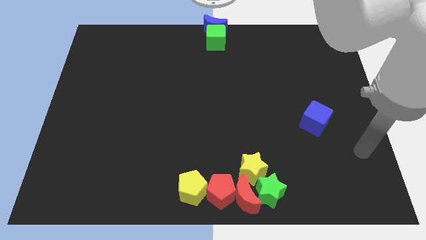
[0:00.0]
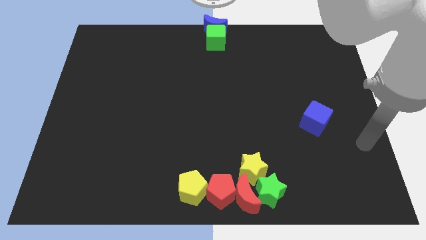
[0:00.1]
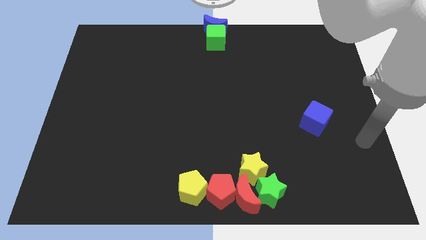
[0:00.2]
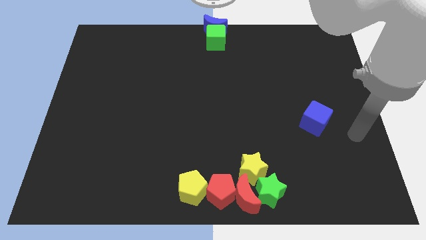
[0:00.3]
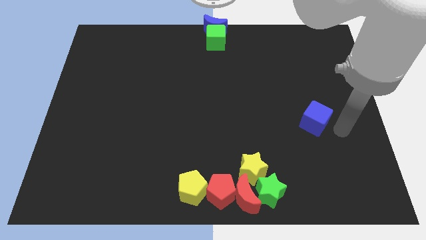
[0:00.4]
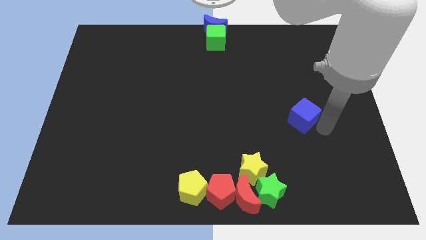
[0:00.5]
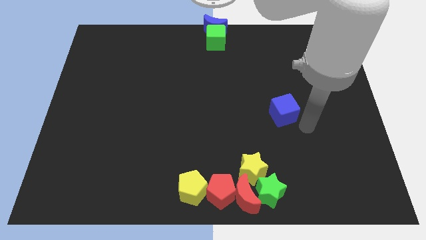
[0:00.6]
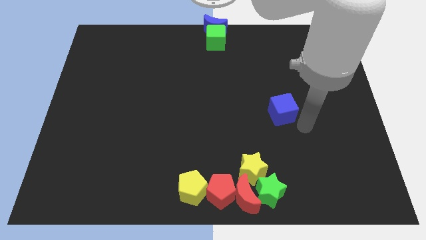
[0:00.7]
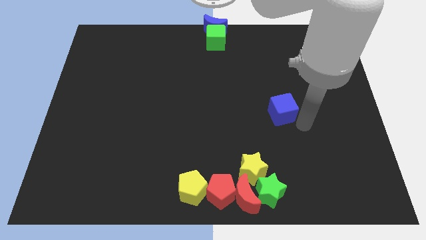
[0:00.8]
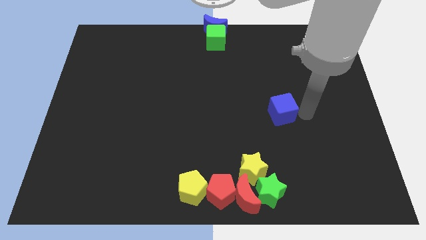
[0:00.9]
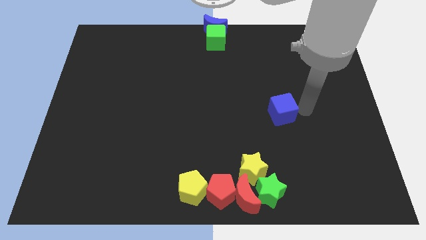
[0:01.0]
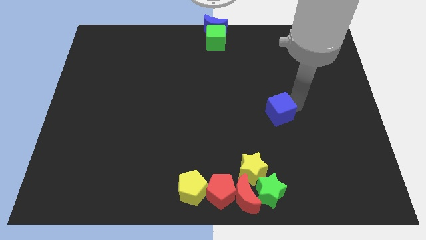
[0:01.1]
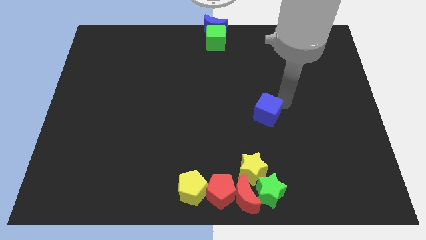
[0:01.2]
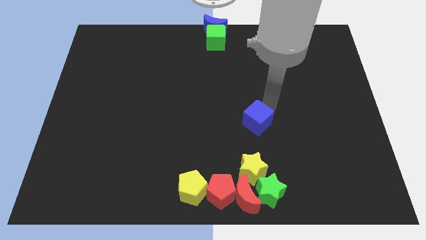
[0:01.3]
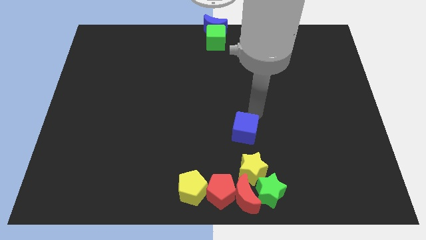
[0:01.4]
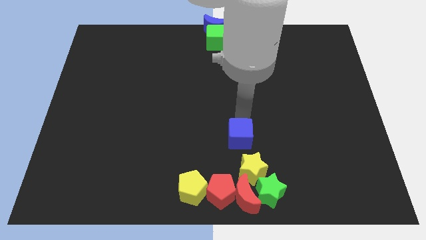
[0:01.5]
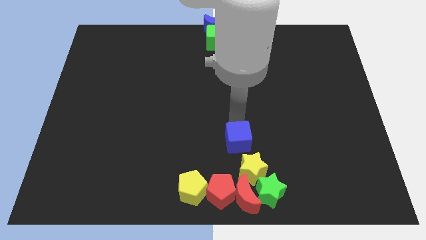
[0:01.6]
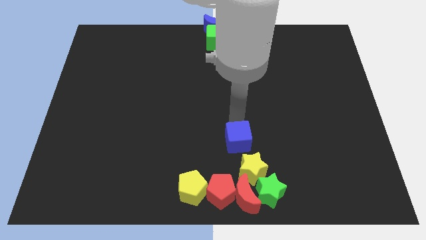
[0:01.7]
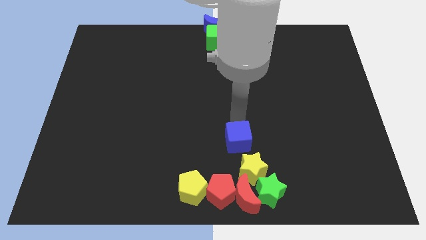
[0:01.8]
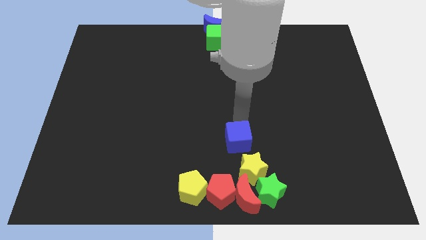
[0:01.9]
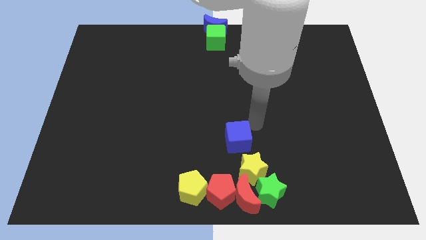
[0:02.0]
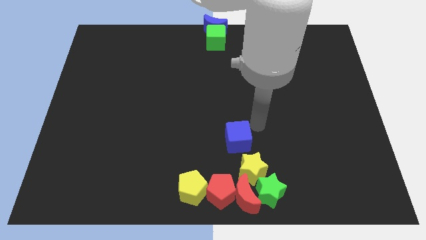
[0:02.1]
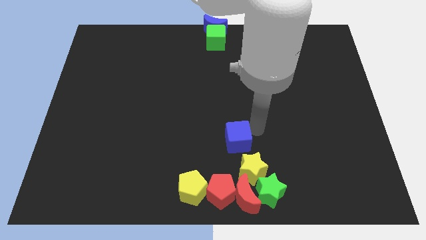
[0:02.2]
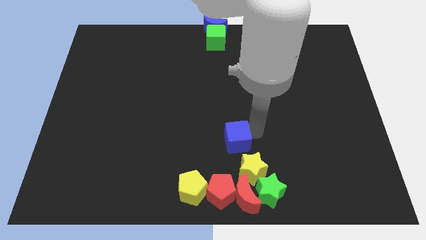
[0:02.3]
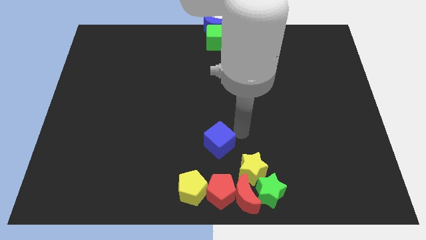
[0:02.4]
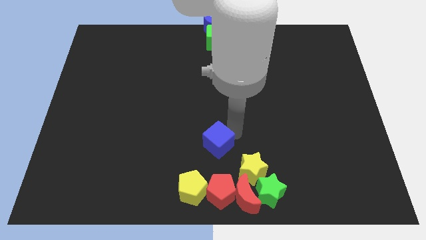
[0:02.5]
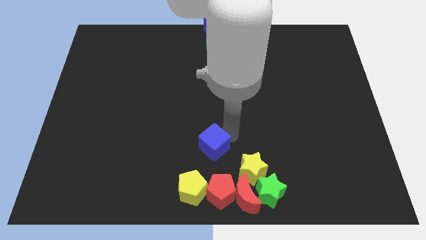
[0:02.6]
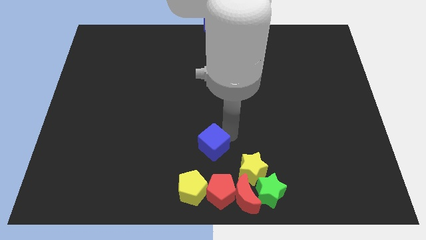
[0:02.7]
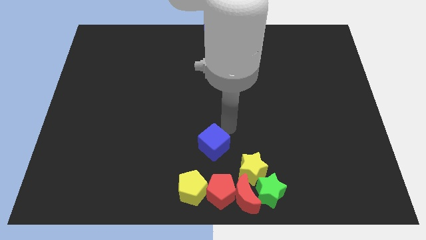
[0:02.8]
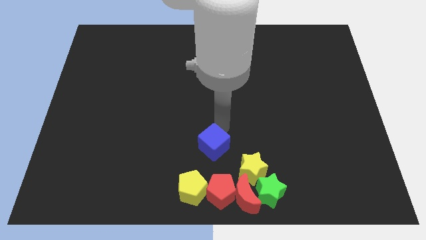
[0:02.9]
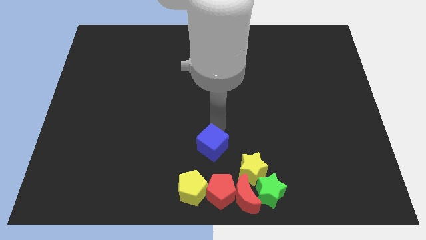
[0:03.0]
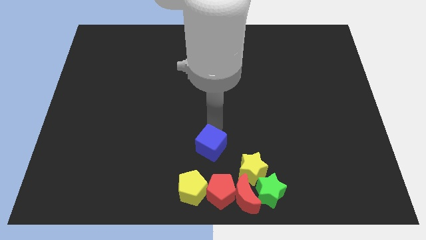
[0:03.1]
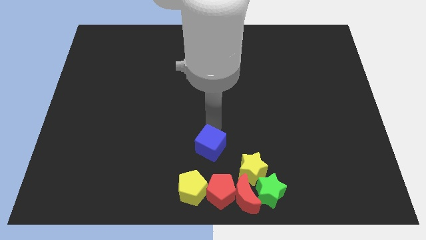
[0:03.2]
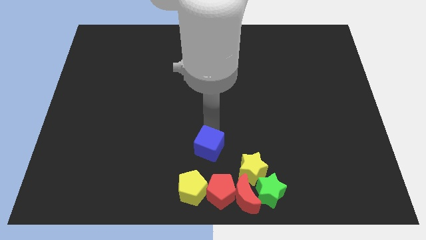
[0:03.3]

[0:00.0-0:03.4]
slide blue cube to top left of yellow star

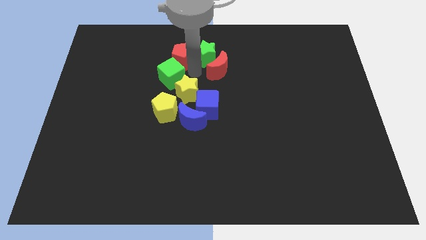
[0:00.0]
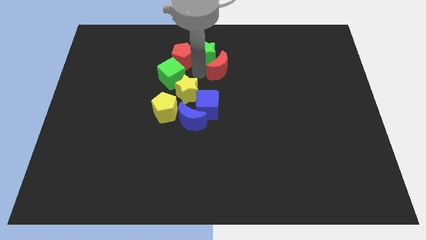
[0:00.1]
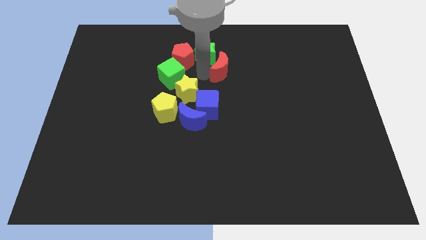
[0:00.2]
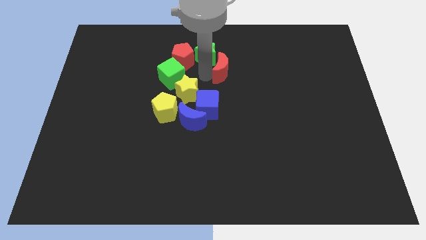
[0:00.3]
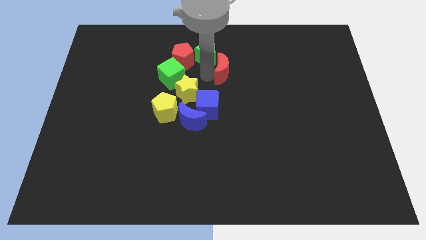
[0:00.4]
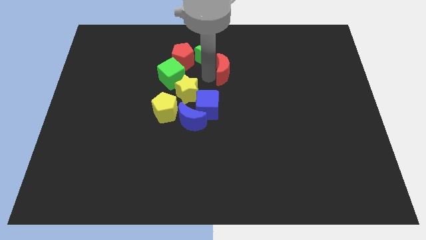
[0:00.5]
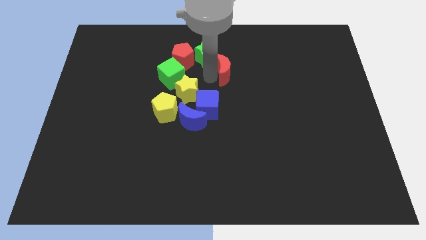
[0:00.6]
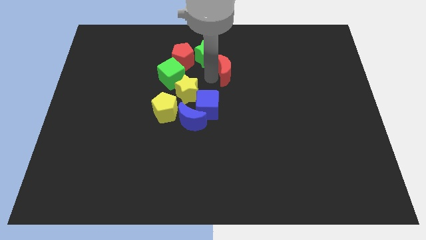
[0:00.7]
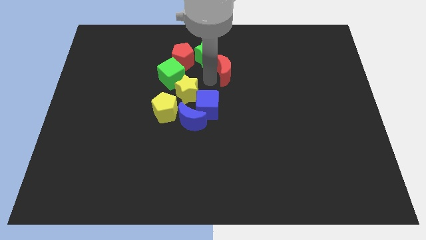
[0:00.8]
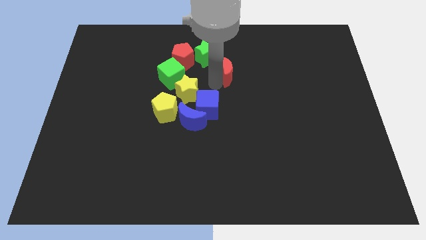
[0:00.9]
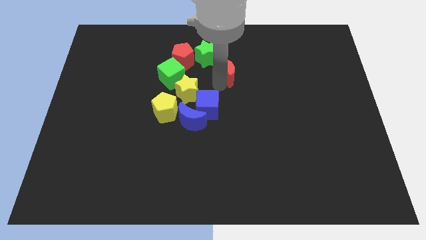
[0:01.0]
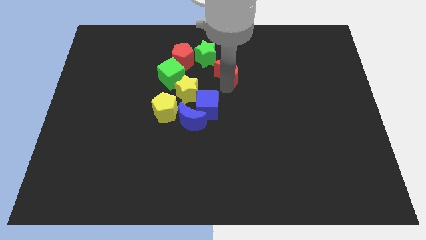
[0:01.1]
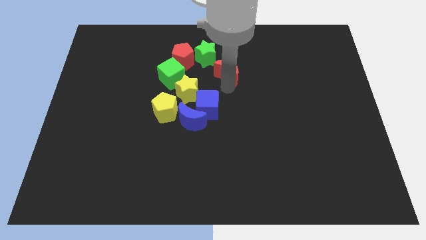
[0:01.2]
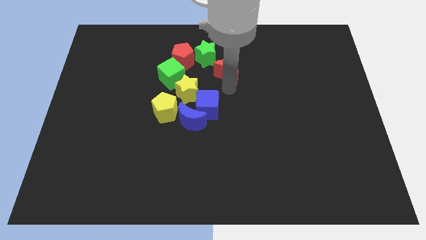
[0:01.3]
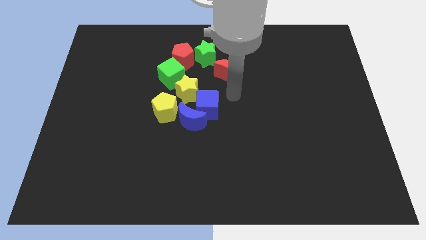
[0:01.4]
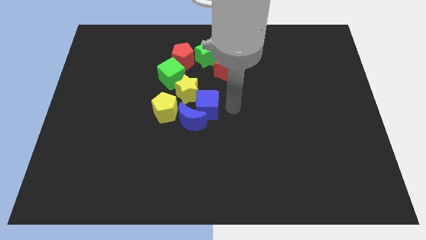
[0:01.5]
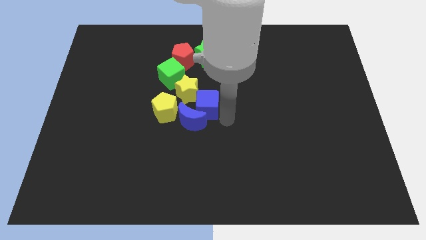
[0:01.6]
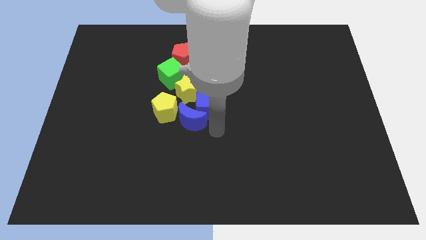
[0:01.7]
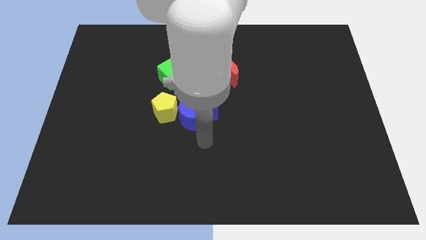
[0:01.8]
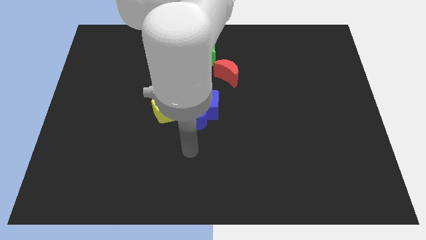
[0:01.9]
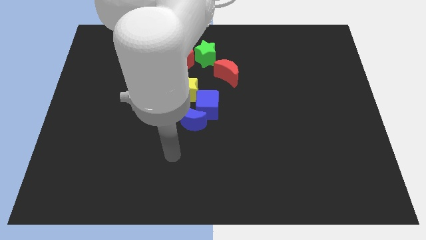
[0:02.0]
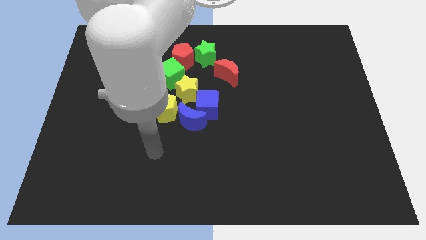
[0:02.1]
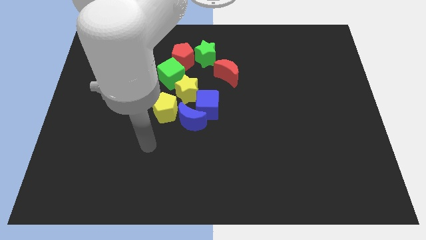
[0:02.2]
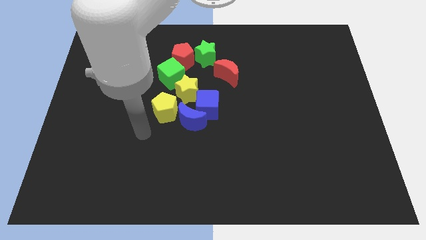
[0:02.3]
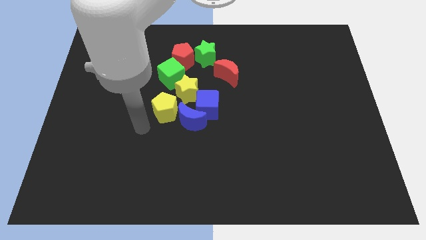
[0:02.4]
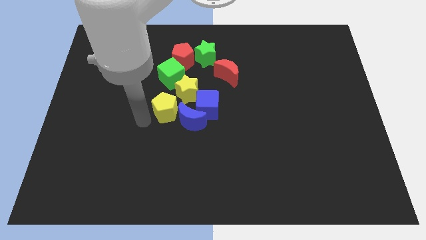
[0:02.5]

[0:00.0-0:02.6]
slightly move the red moon to the right

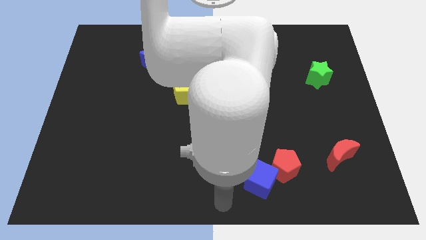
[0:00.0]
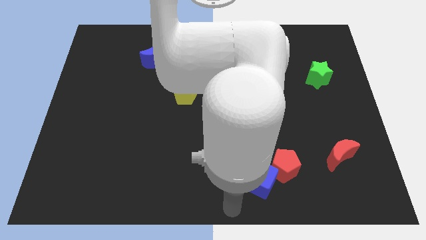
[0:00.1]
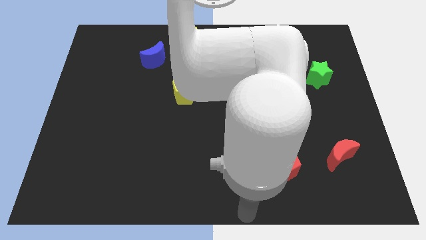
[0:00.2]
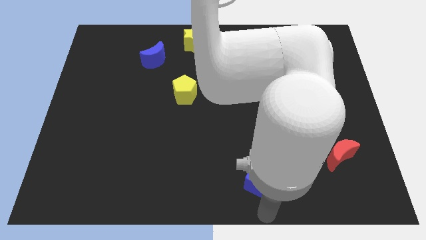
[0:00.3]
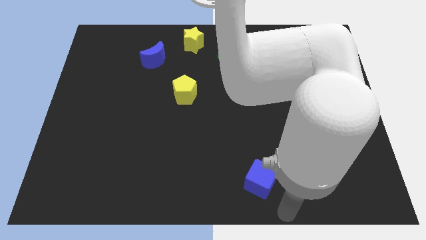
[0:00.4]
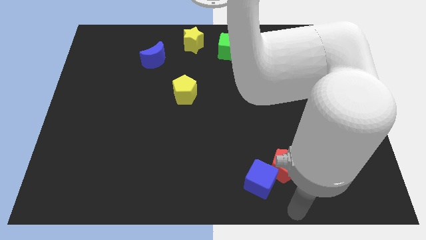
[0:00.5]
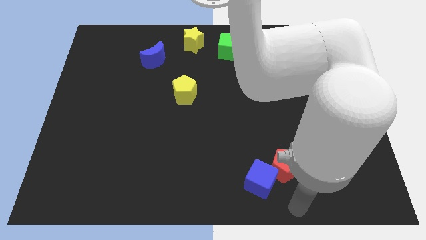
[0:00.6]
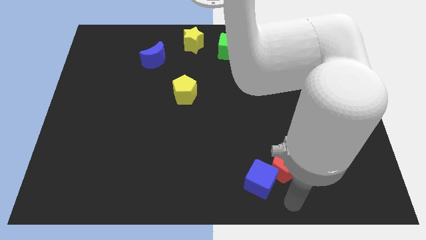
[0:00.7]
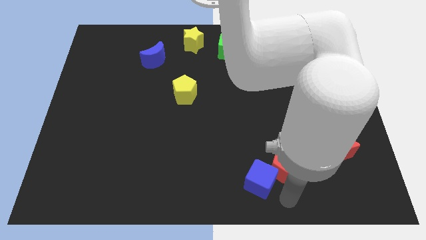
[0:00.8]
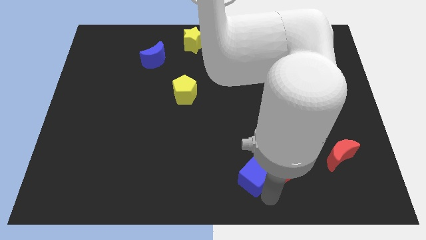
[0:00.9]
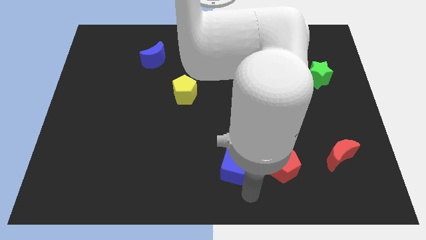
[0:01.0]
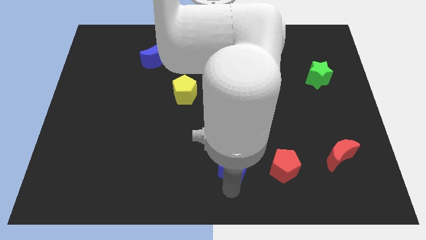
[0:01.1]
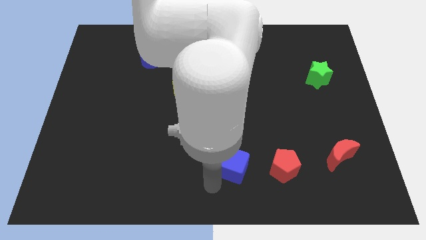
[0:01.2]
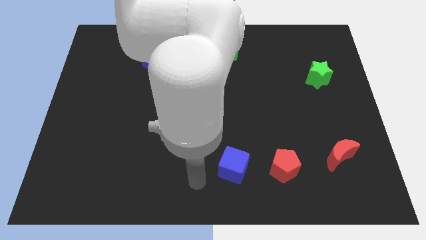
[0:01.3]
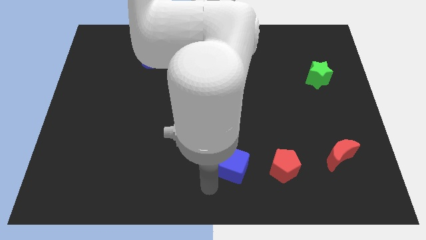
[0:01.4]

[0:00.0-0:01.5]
separate blue cube from the red pentagon

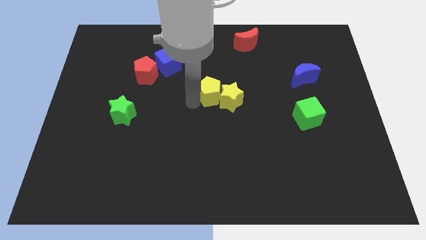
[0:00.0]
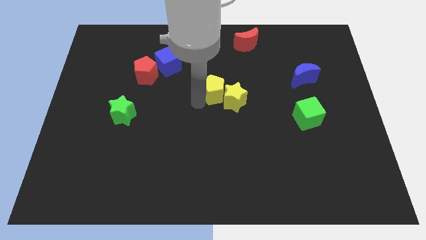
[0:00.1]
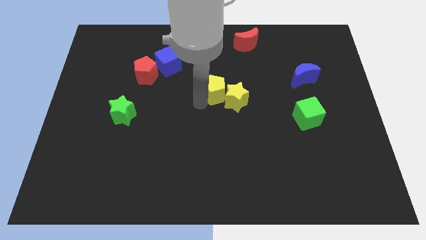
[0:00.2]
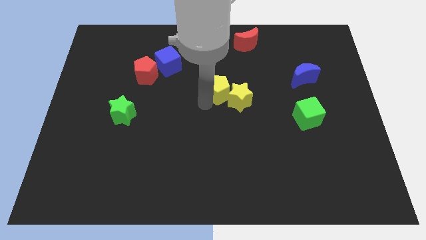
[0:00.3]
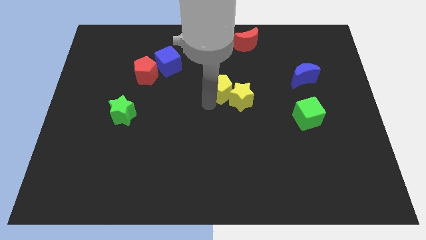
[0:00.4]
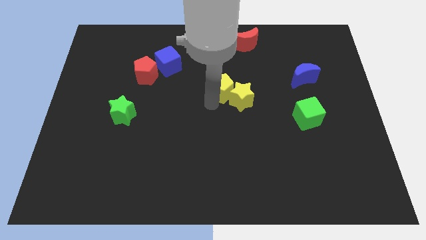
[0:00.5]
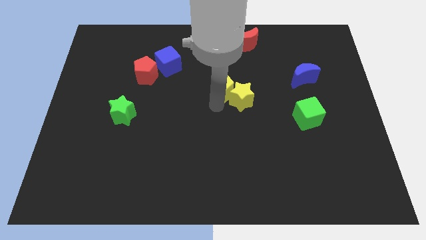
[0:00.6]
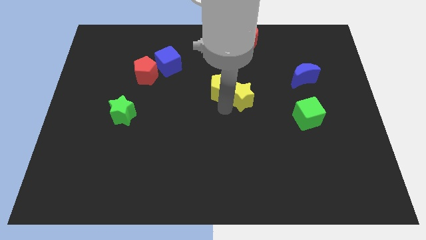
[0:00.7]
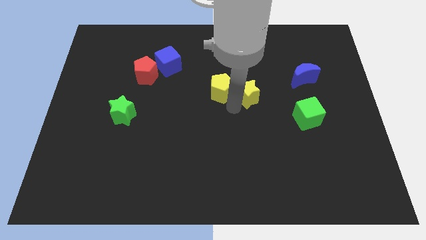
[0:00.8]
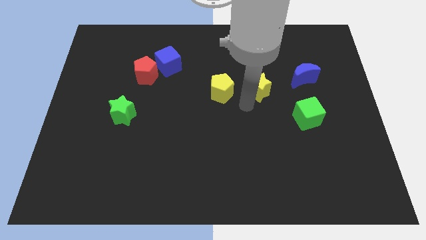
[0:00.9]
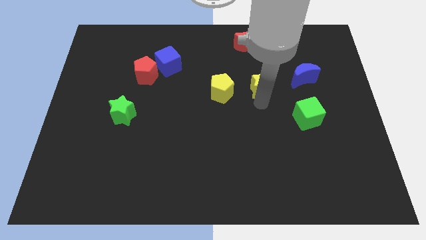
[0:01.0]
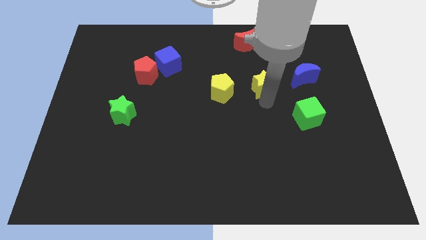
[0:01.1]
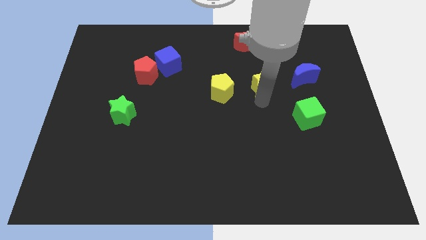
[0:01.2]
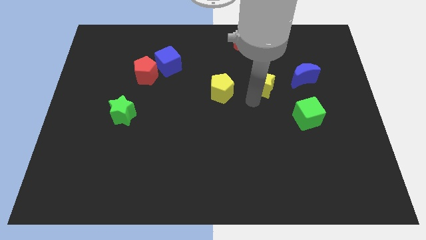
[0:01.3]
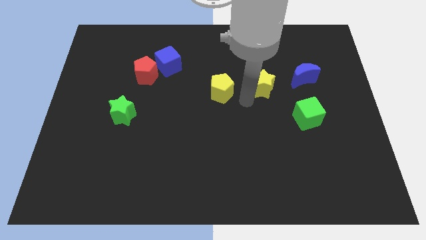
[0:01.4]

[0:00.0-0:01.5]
separate the yellow star and yellow pentagon

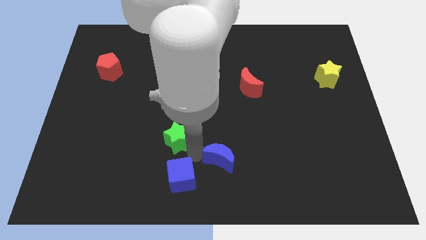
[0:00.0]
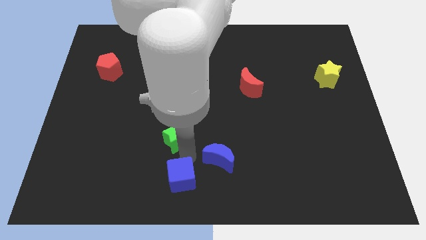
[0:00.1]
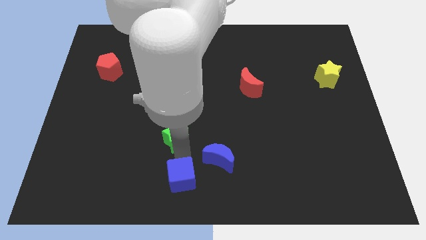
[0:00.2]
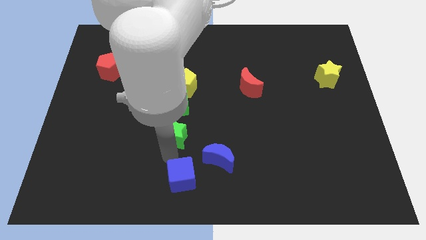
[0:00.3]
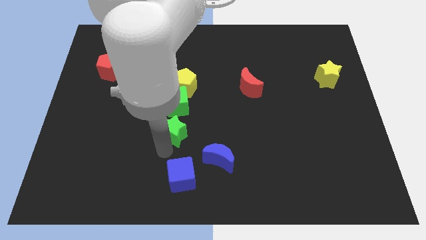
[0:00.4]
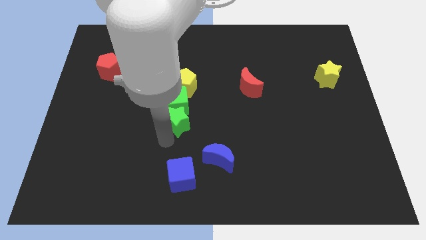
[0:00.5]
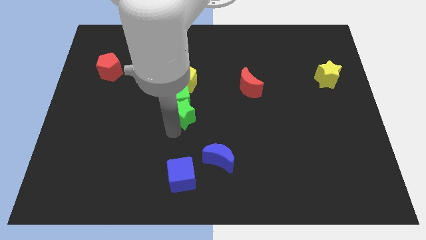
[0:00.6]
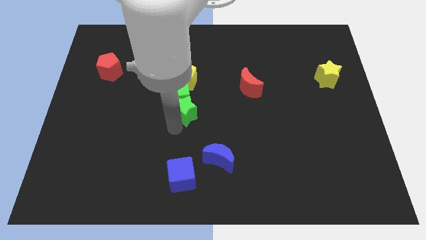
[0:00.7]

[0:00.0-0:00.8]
move the green star into the green cube
